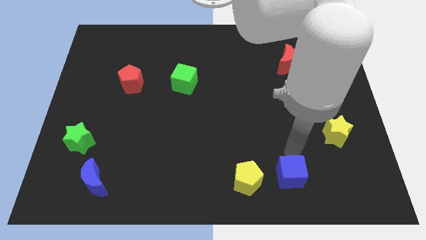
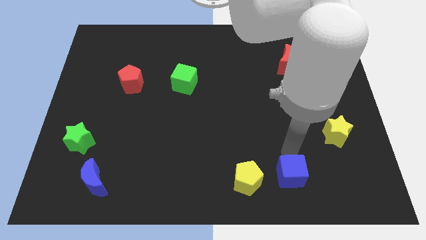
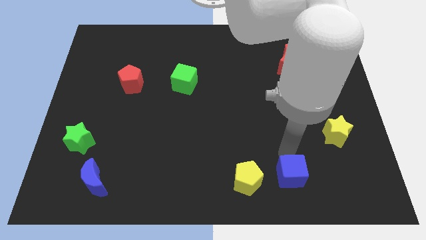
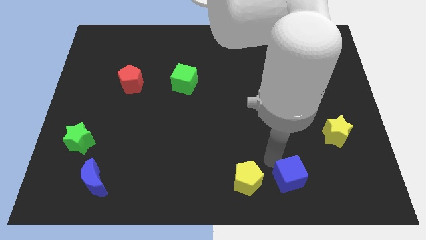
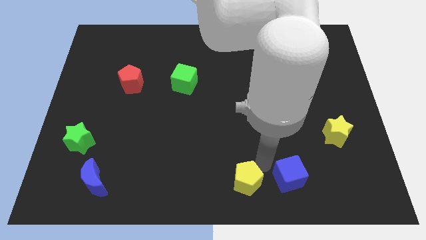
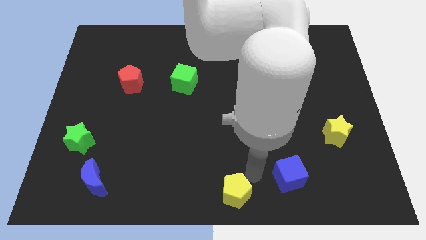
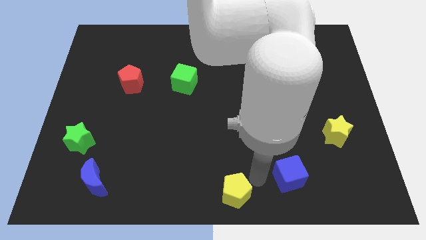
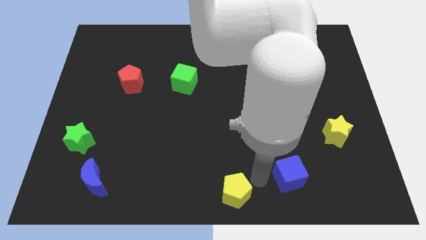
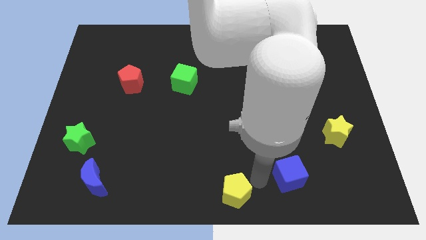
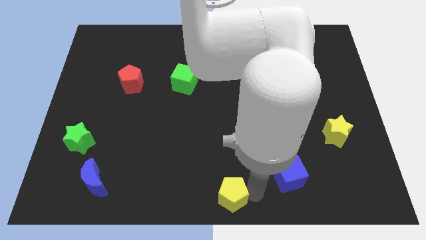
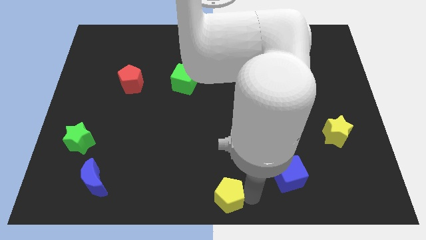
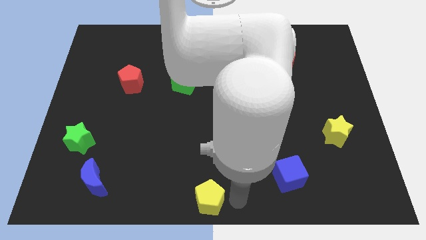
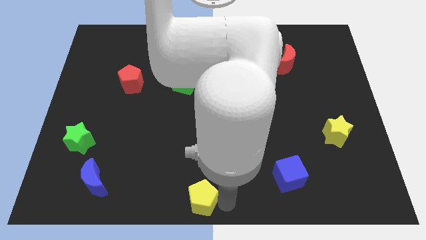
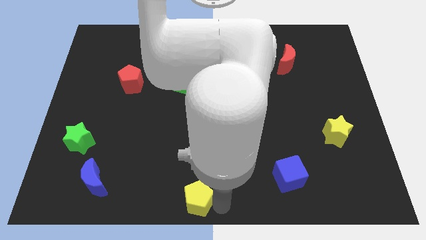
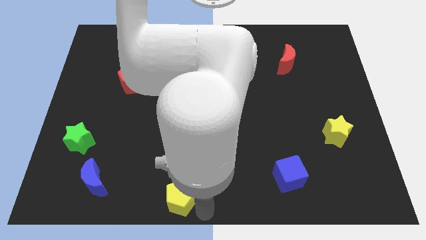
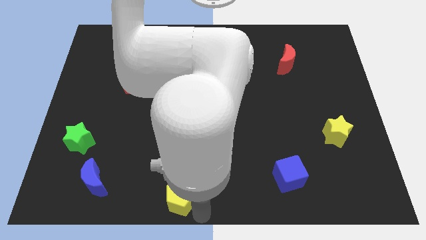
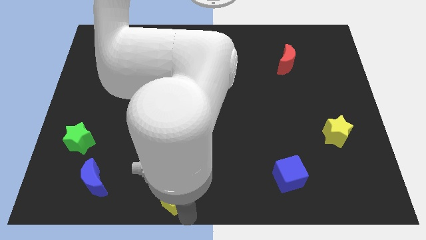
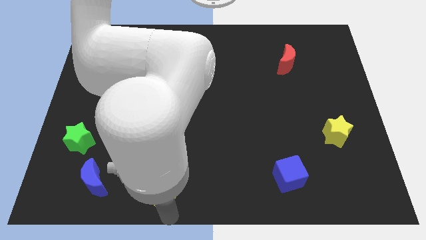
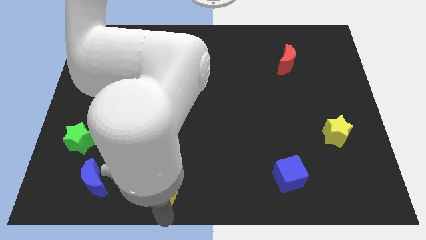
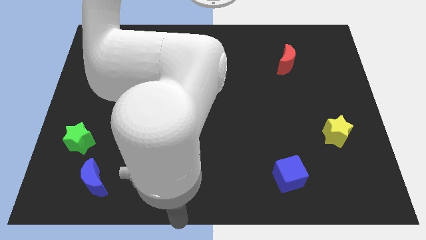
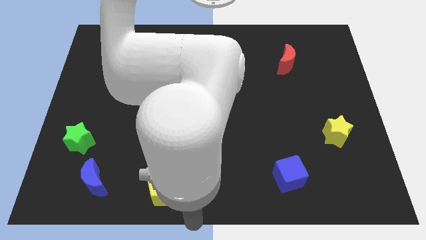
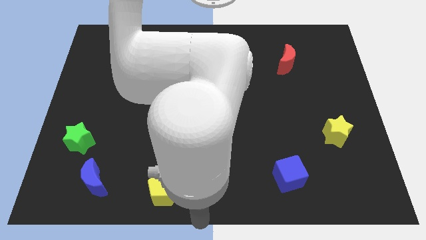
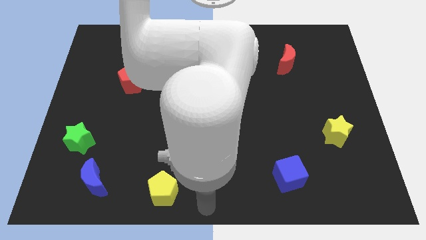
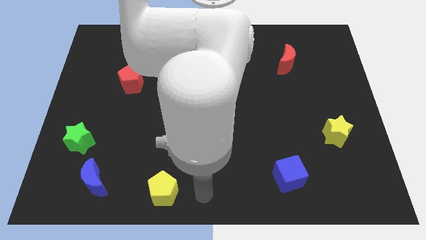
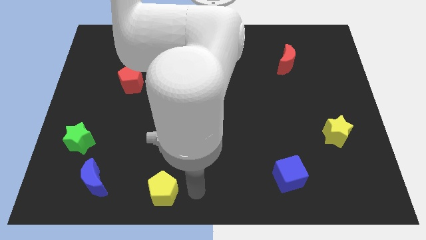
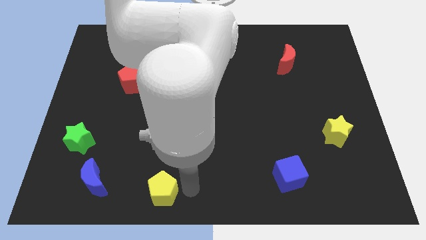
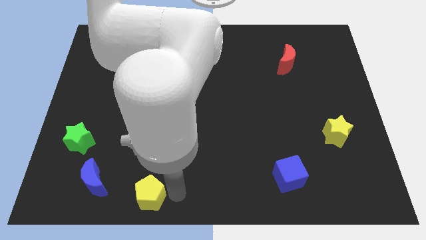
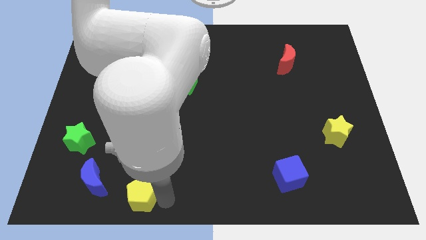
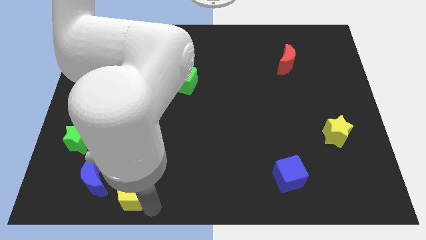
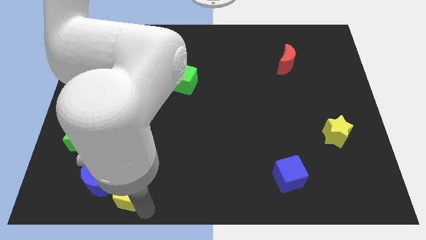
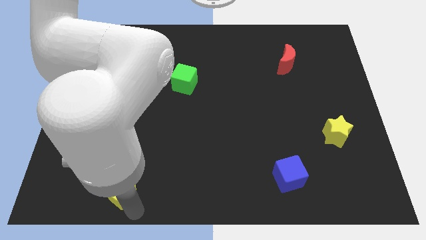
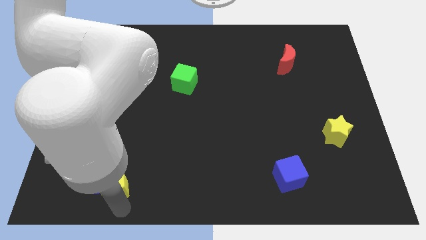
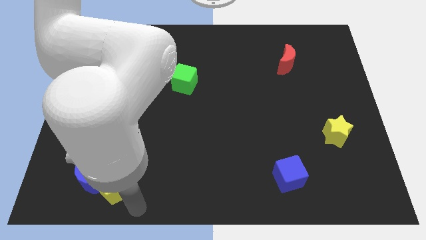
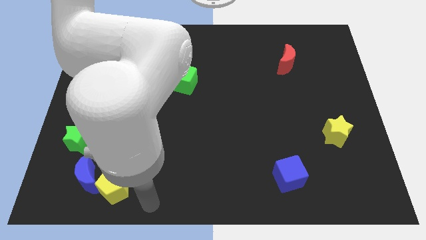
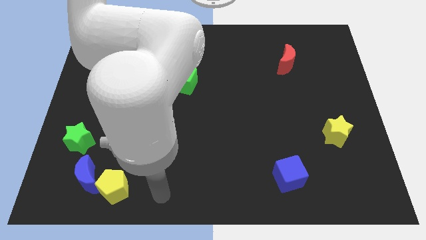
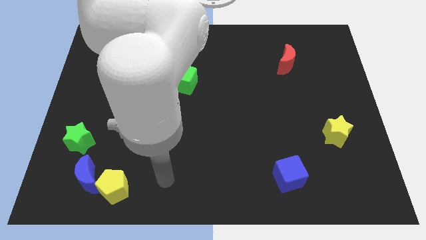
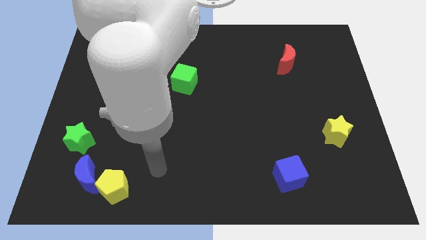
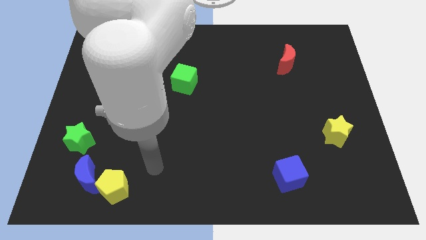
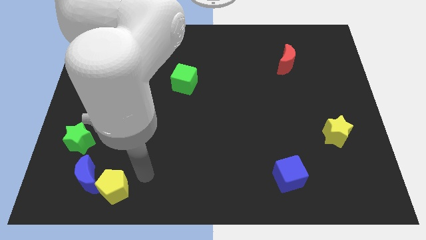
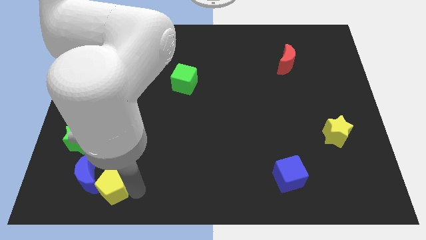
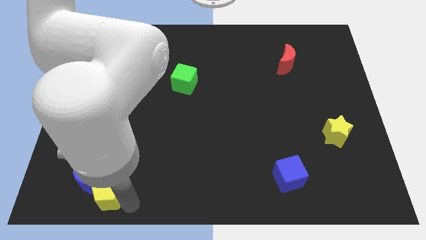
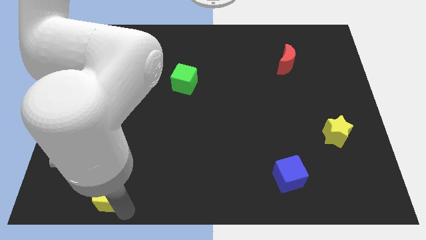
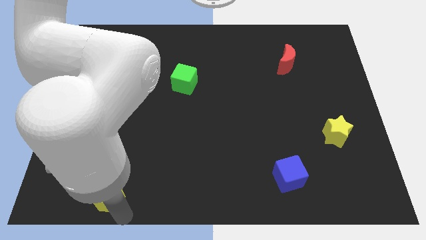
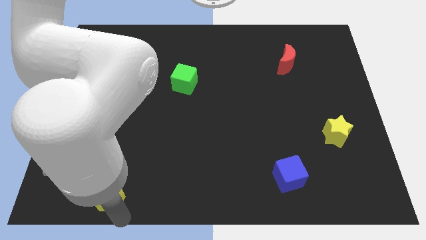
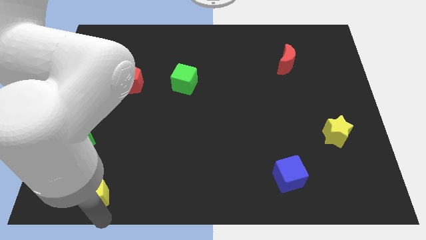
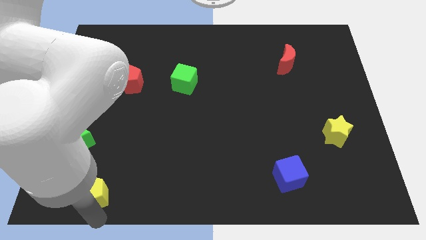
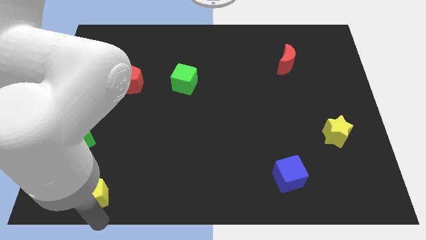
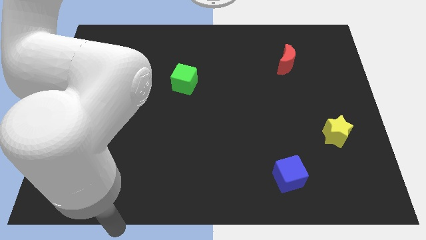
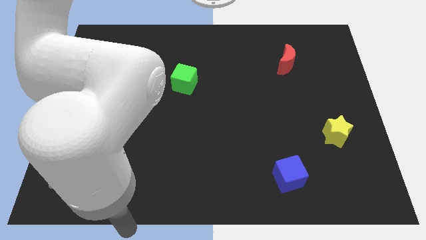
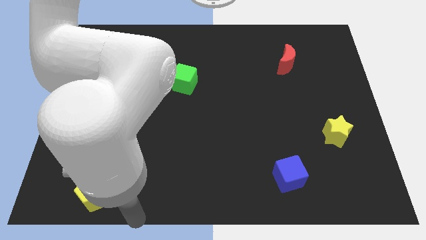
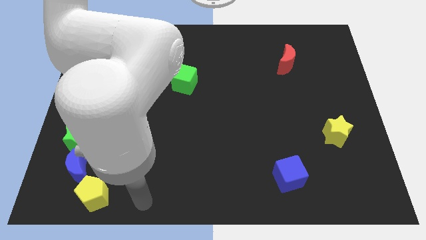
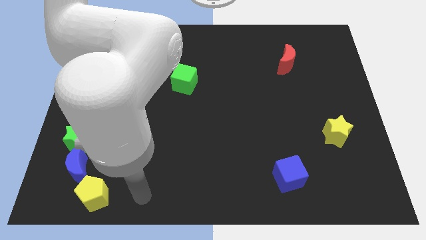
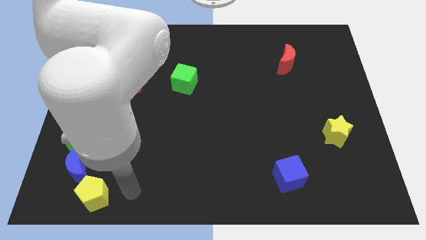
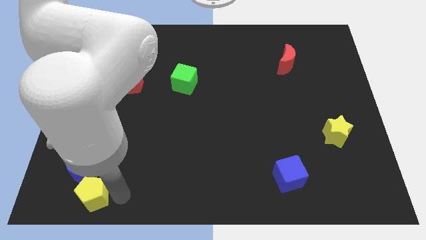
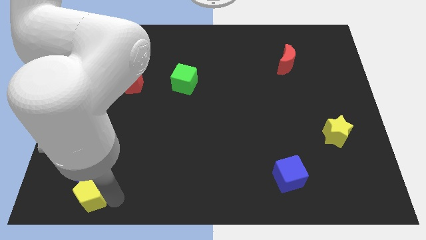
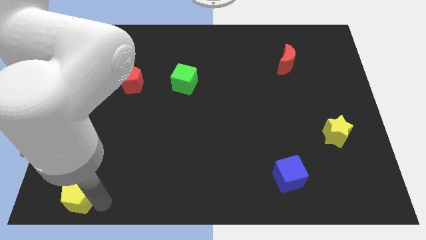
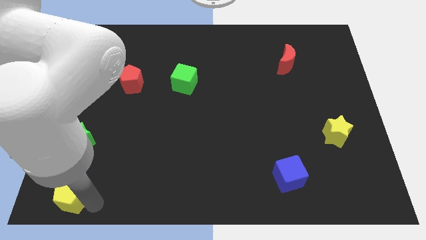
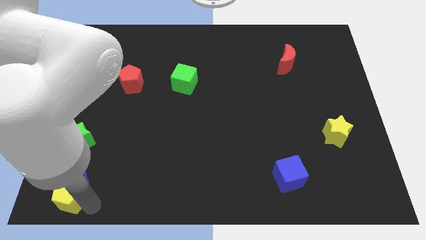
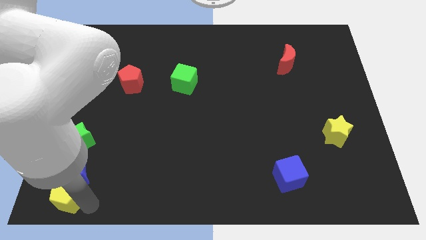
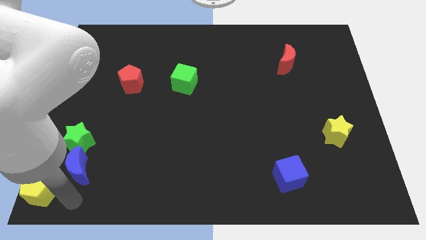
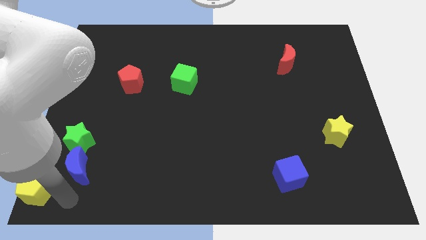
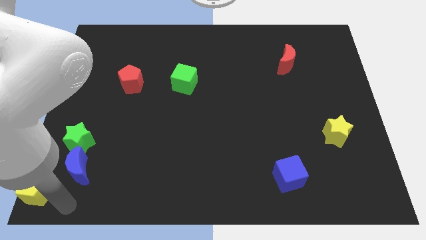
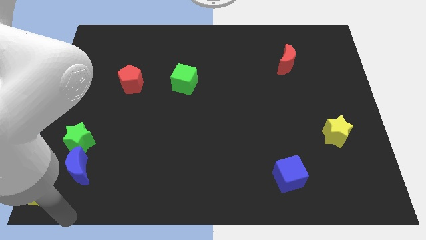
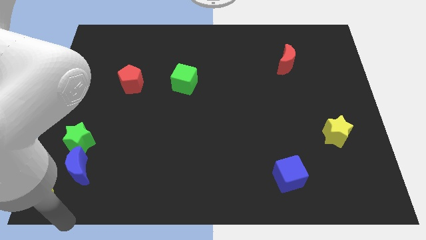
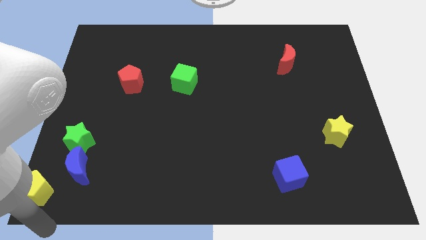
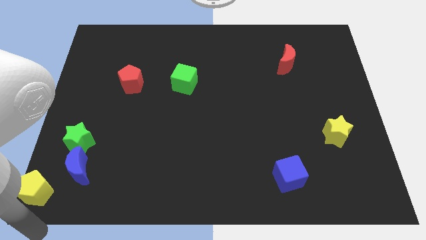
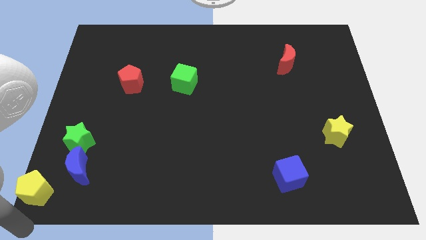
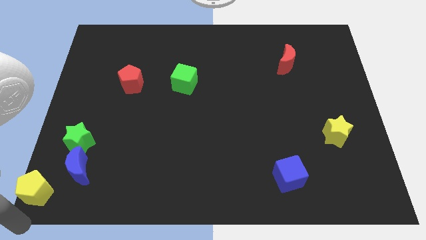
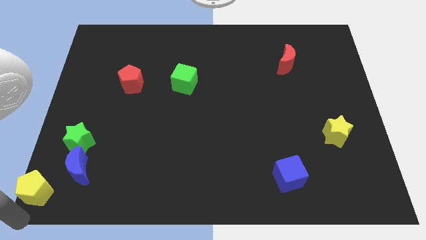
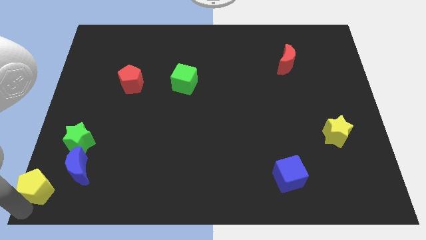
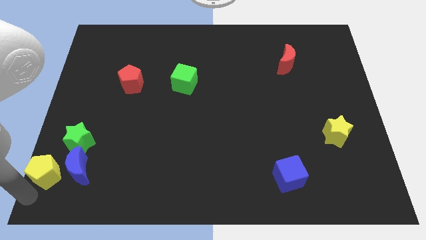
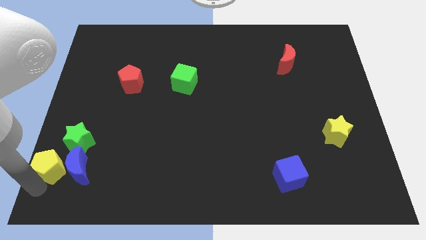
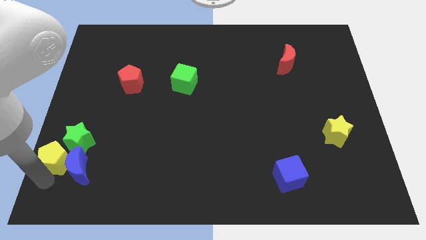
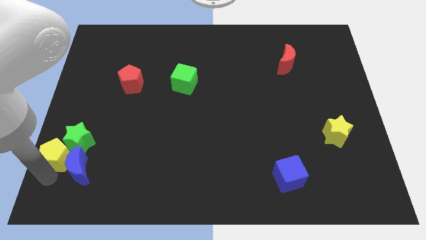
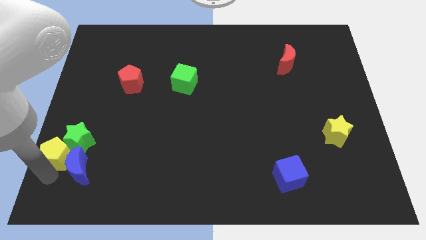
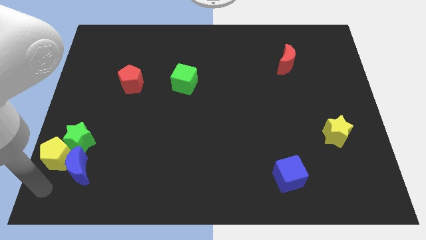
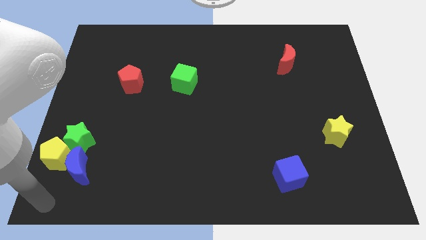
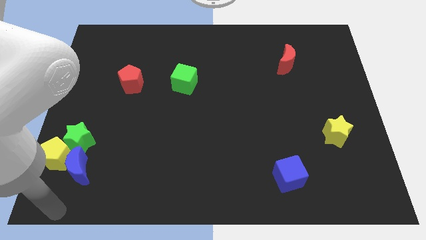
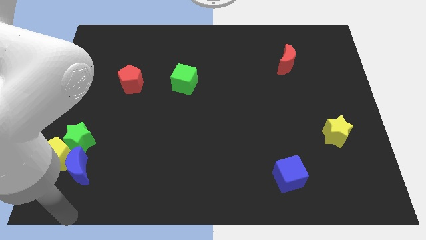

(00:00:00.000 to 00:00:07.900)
push the yellow pentagon towards the left side of the green star

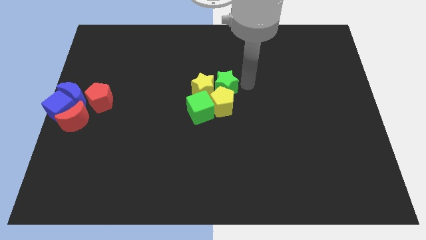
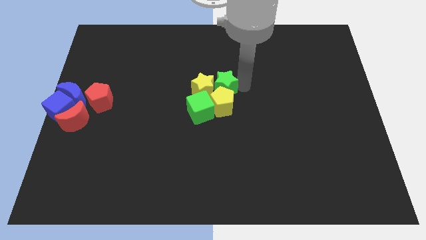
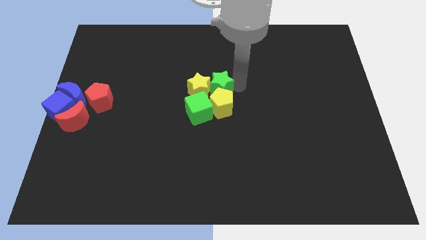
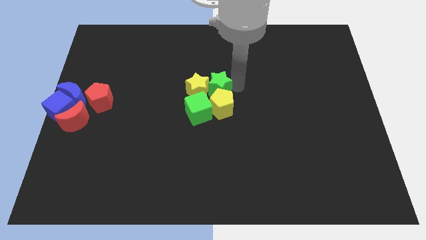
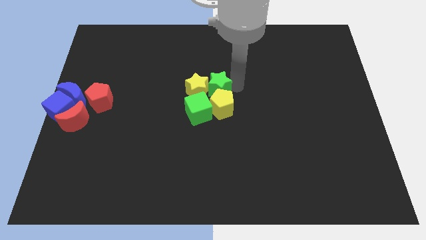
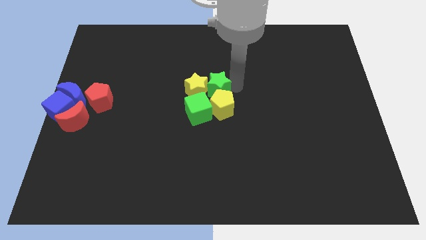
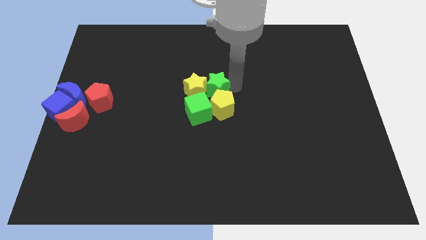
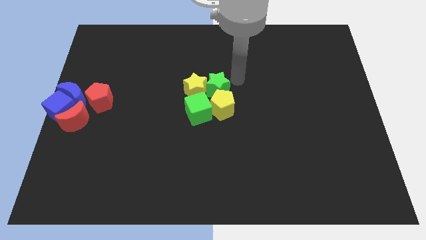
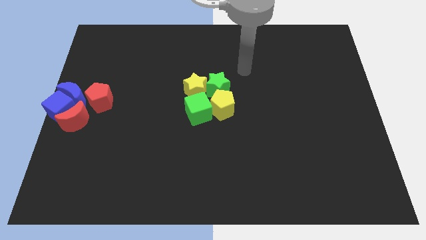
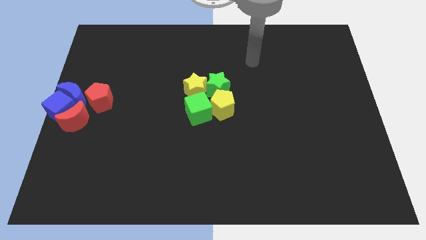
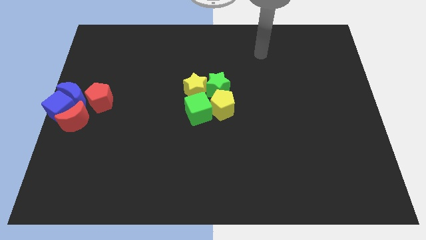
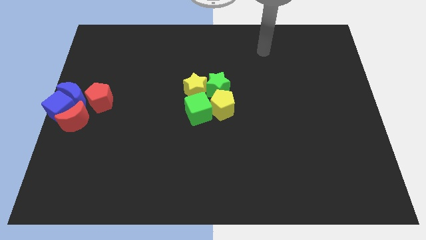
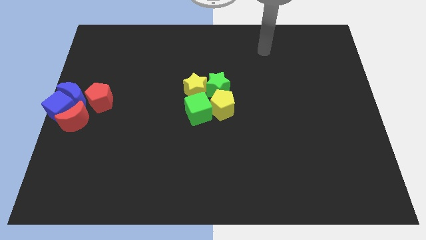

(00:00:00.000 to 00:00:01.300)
slightly move to the green middle of the board
